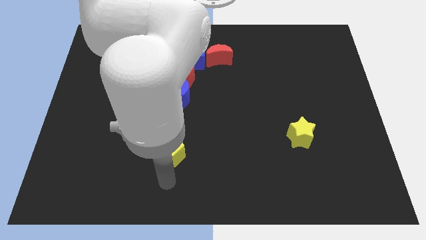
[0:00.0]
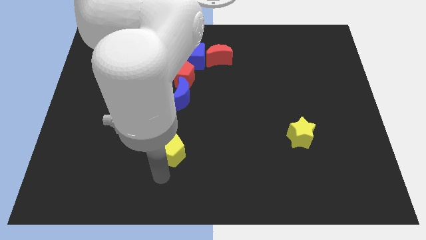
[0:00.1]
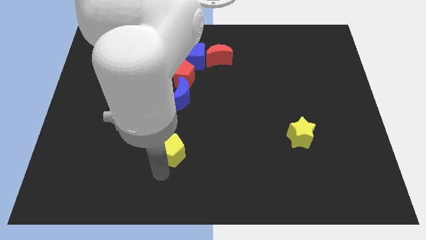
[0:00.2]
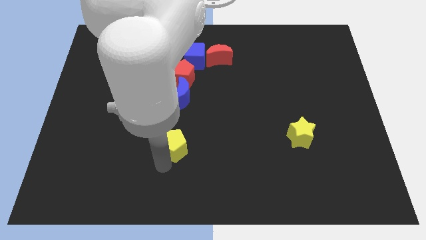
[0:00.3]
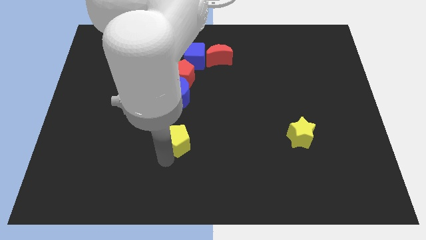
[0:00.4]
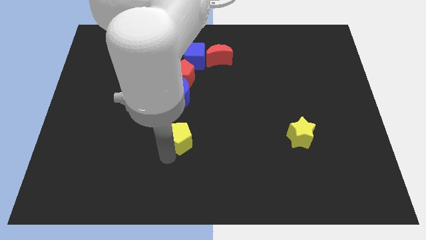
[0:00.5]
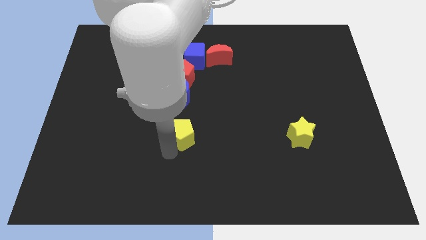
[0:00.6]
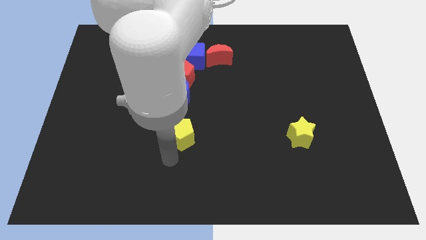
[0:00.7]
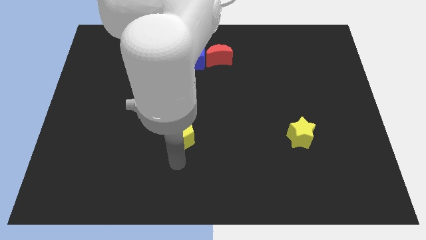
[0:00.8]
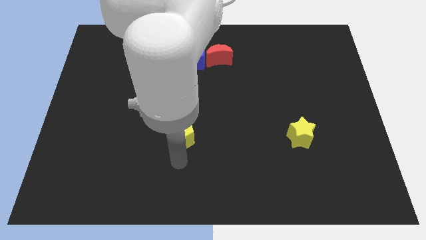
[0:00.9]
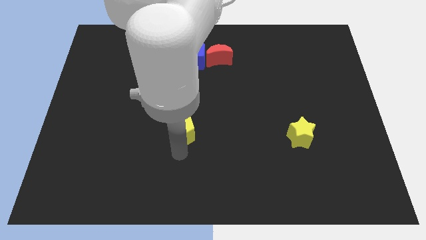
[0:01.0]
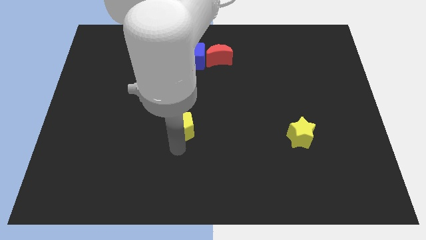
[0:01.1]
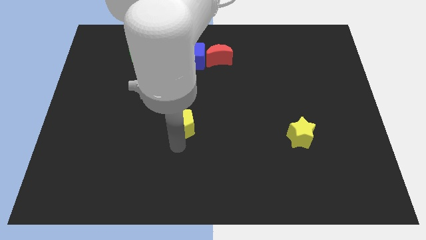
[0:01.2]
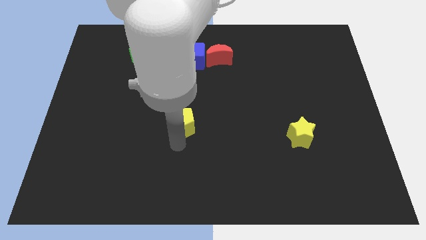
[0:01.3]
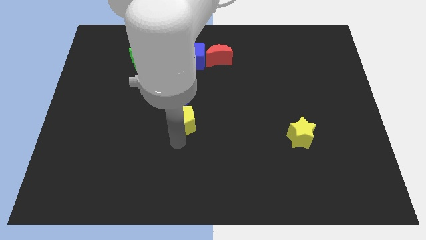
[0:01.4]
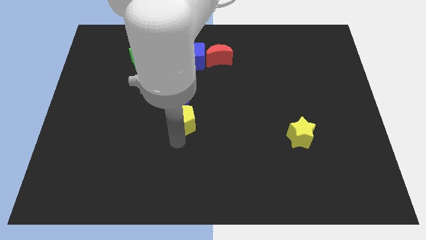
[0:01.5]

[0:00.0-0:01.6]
push the yellow pentagon to the bottom of the blue crescent

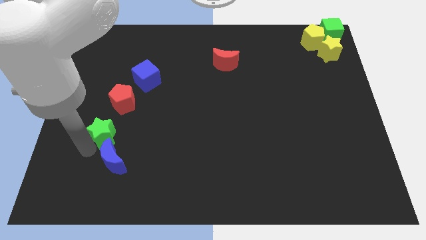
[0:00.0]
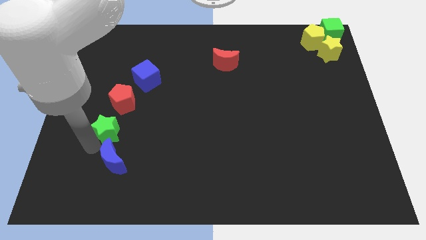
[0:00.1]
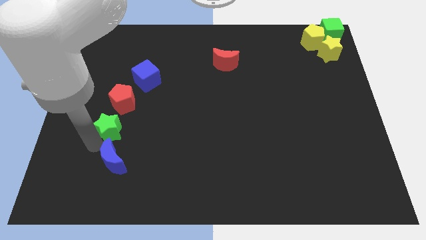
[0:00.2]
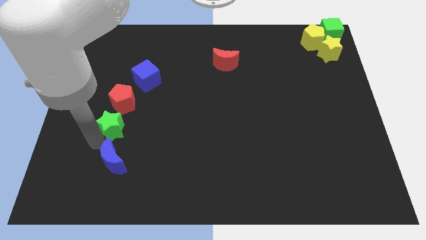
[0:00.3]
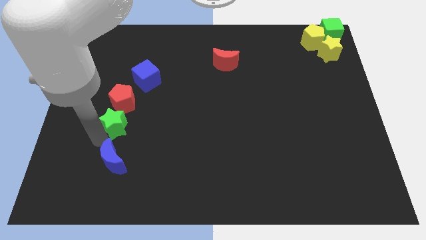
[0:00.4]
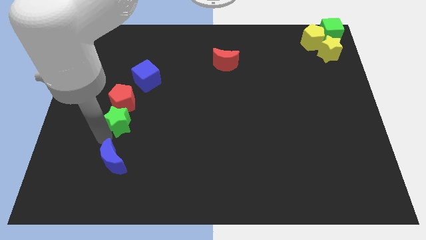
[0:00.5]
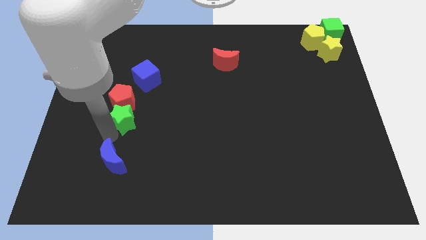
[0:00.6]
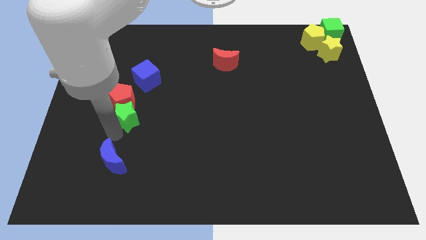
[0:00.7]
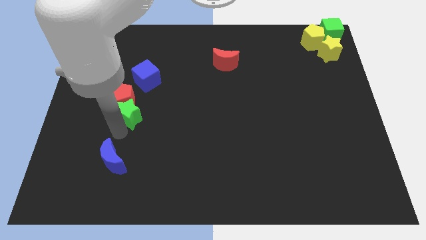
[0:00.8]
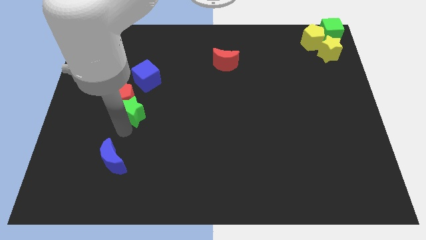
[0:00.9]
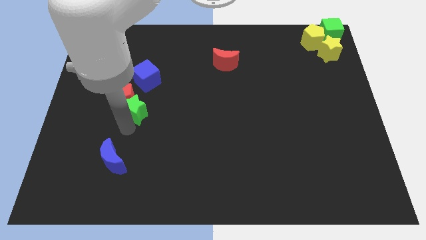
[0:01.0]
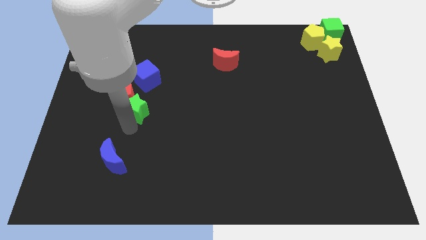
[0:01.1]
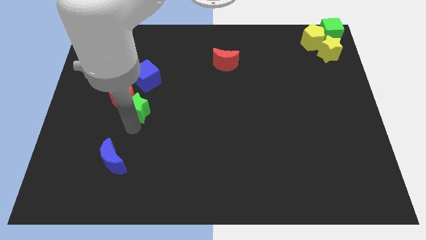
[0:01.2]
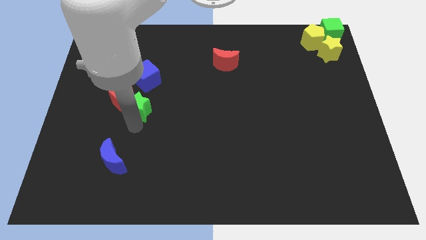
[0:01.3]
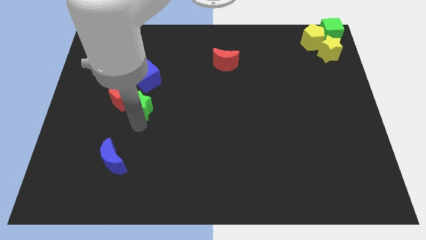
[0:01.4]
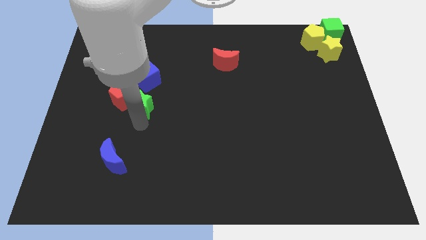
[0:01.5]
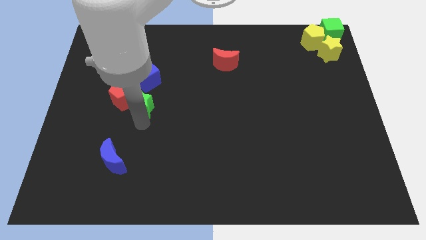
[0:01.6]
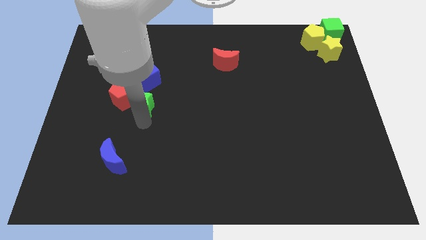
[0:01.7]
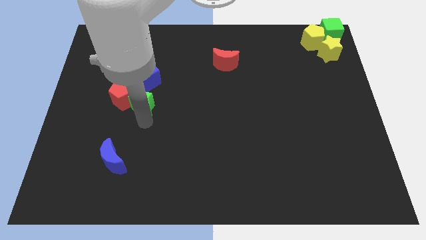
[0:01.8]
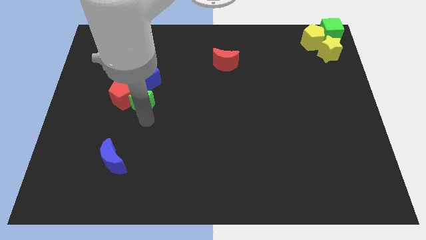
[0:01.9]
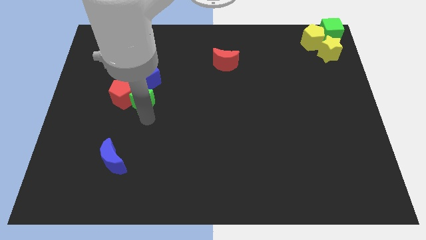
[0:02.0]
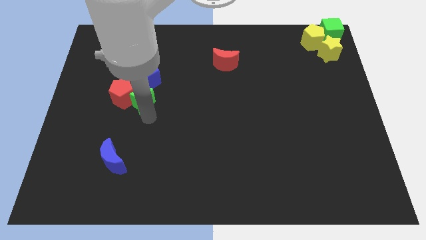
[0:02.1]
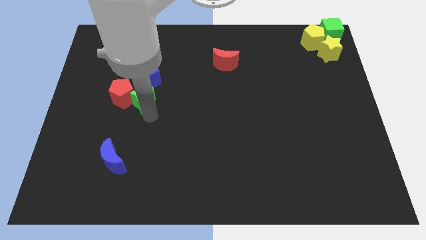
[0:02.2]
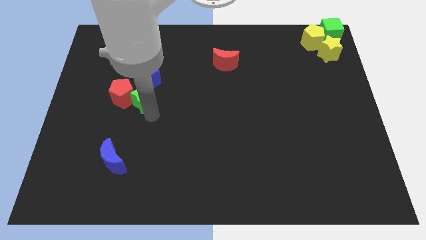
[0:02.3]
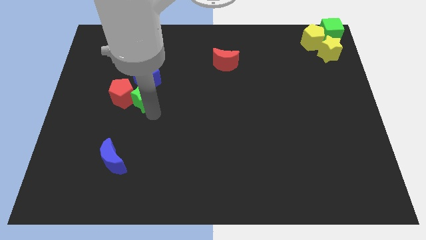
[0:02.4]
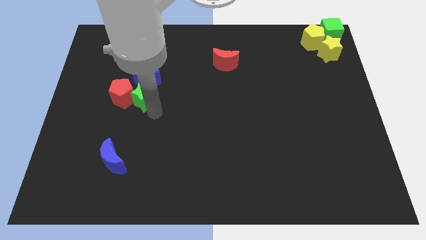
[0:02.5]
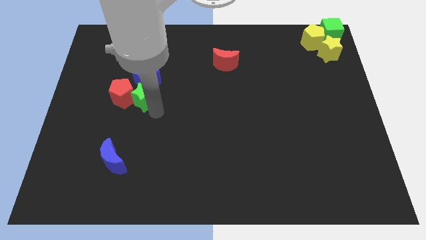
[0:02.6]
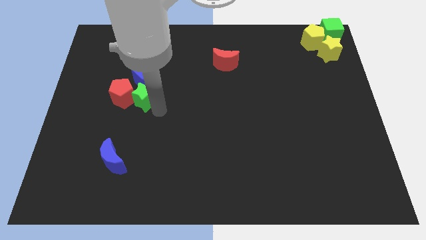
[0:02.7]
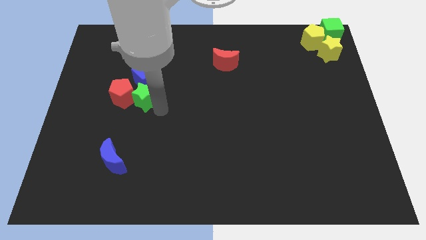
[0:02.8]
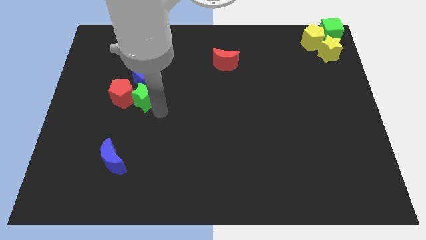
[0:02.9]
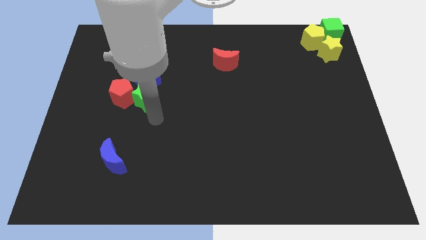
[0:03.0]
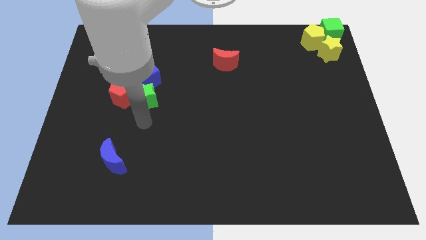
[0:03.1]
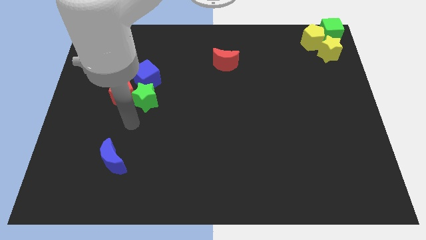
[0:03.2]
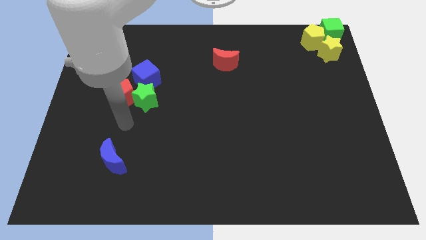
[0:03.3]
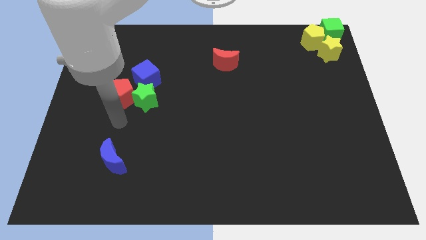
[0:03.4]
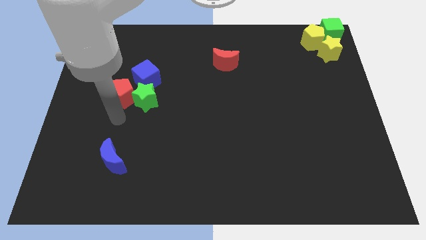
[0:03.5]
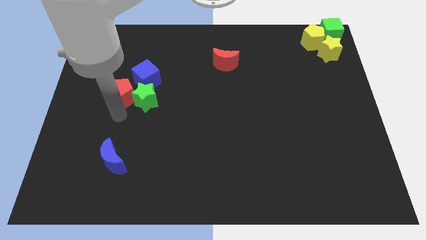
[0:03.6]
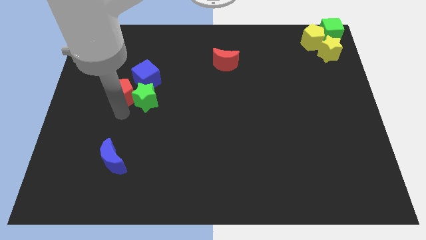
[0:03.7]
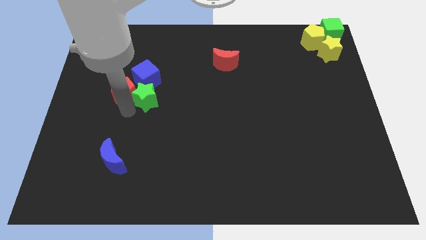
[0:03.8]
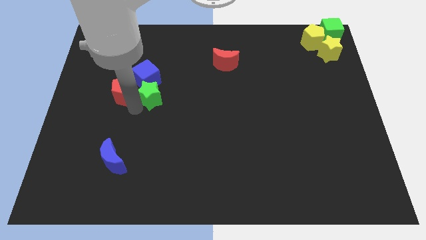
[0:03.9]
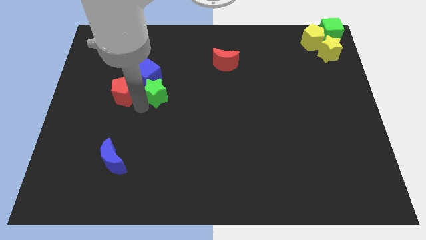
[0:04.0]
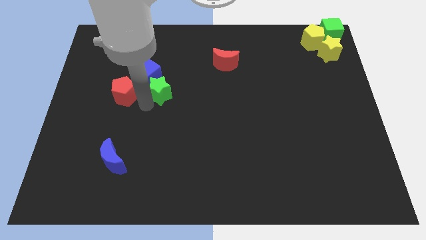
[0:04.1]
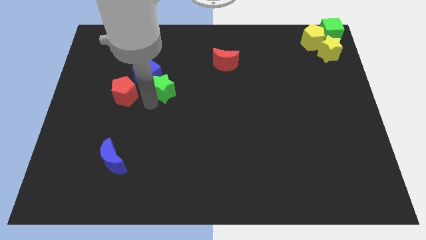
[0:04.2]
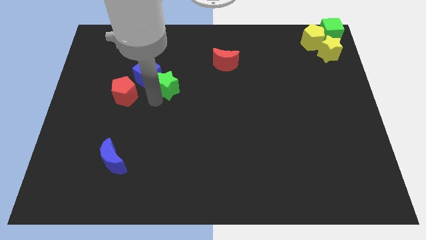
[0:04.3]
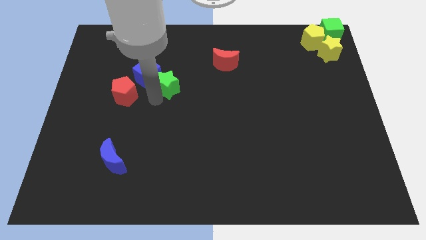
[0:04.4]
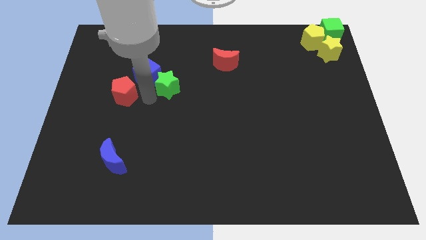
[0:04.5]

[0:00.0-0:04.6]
move the green star to the bottom right of the blue cube

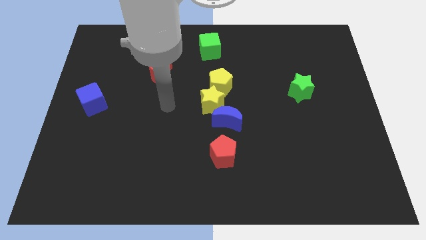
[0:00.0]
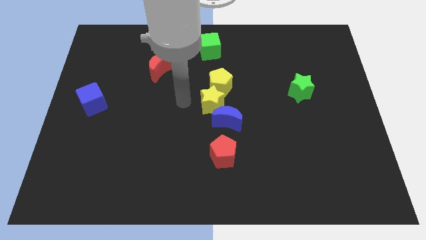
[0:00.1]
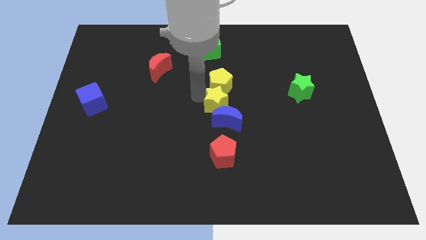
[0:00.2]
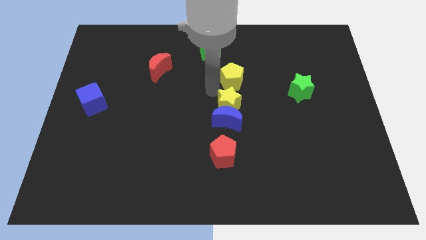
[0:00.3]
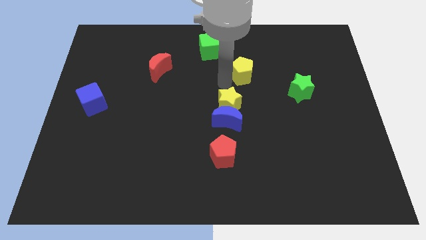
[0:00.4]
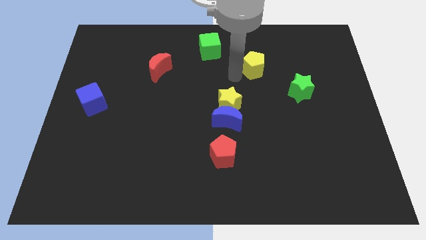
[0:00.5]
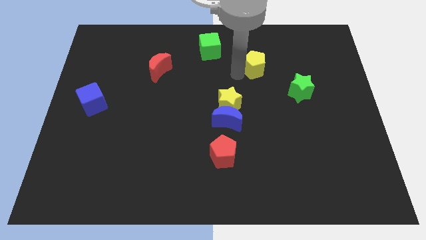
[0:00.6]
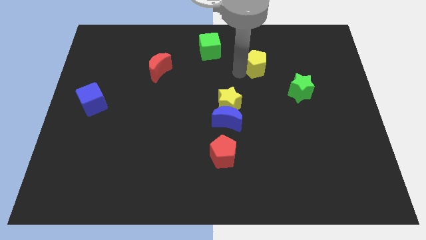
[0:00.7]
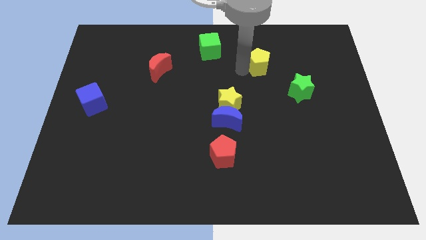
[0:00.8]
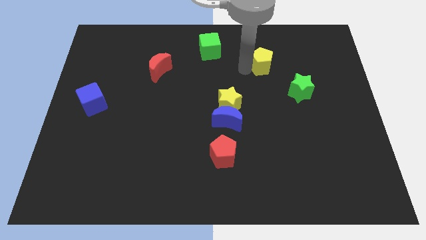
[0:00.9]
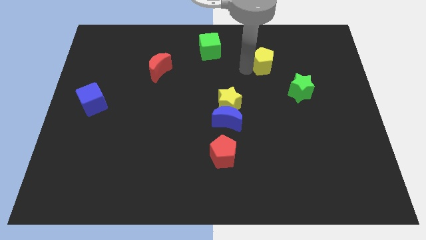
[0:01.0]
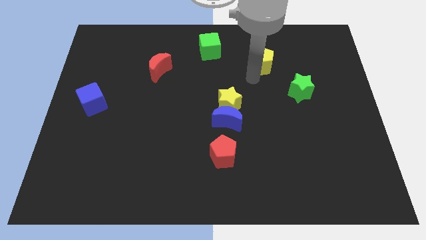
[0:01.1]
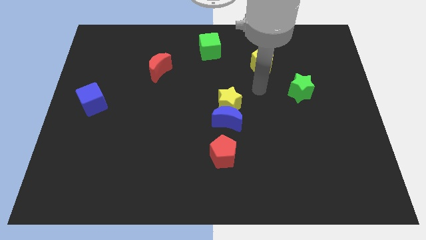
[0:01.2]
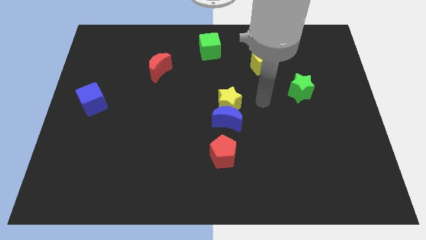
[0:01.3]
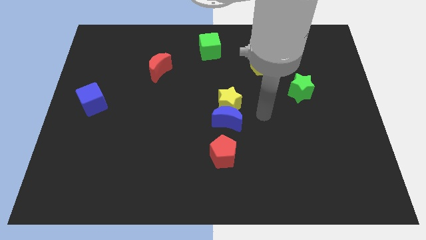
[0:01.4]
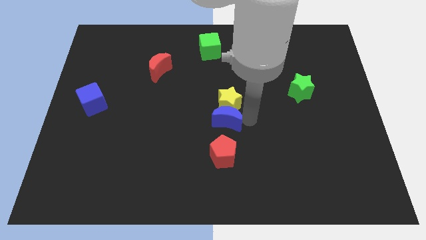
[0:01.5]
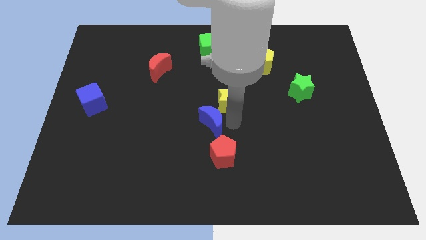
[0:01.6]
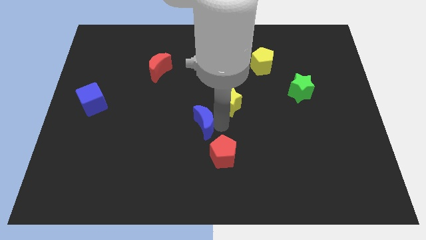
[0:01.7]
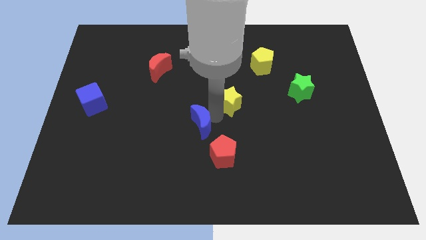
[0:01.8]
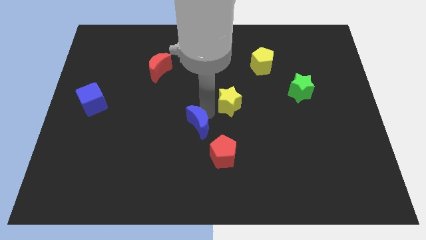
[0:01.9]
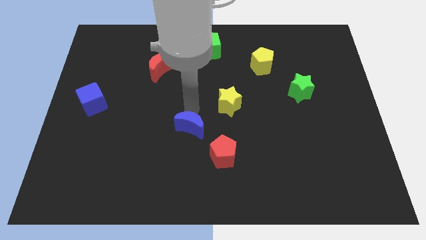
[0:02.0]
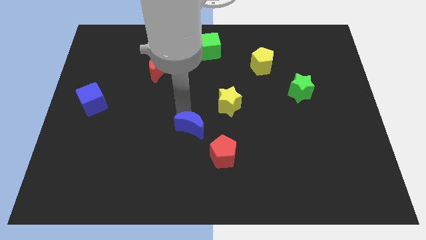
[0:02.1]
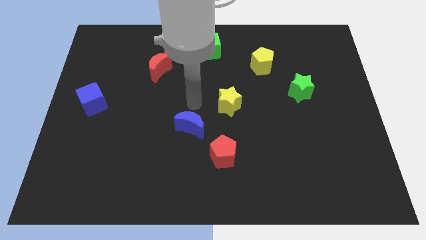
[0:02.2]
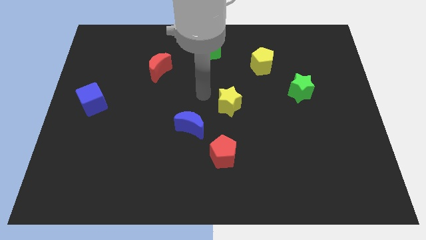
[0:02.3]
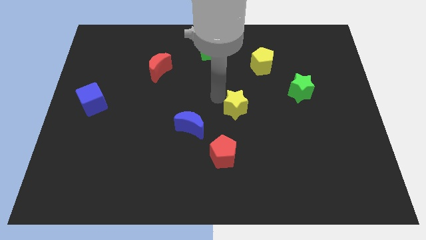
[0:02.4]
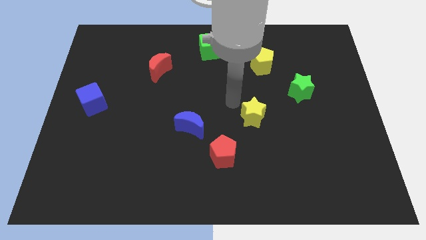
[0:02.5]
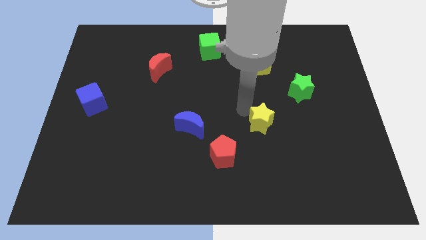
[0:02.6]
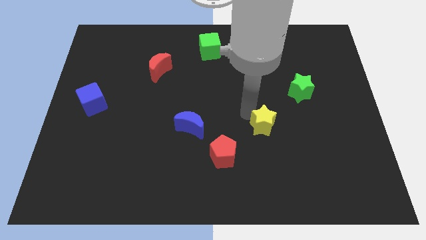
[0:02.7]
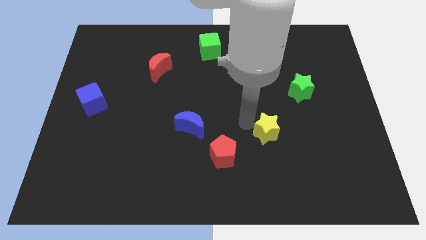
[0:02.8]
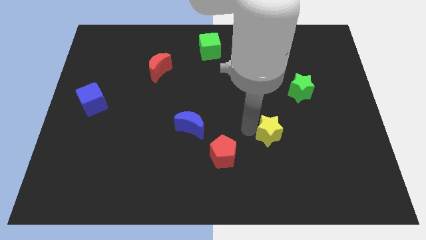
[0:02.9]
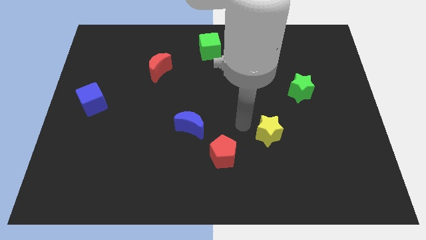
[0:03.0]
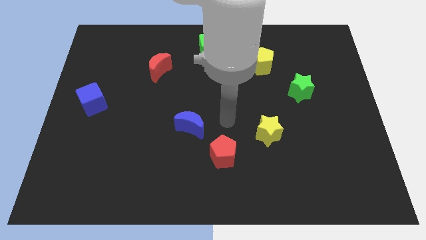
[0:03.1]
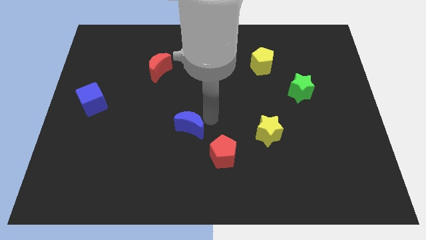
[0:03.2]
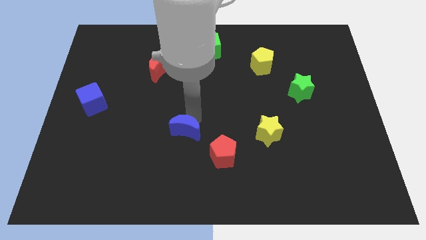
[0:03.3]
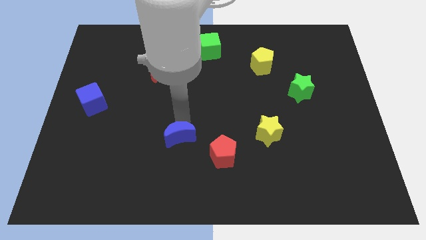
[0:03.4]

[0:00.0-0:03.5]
separate the yellow pentagon and blue semicircle from the yellow star
